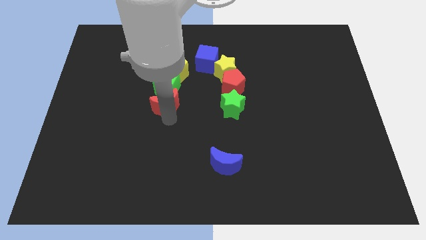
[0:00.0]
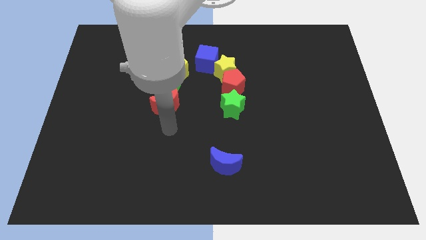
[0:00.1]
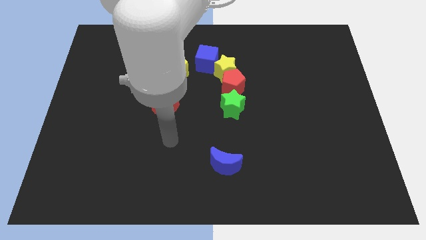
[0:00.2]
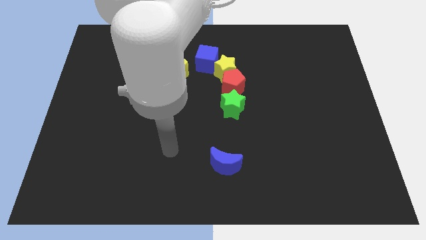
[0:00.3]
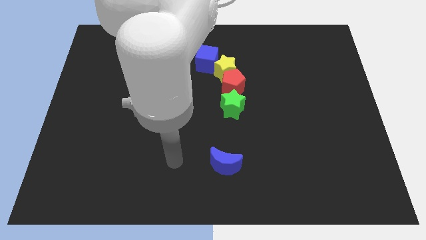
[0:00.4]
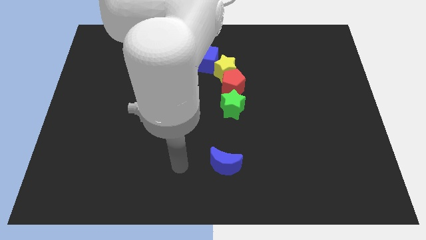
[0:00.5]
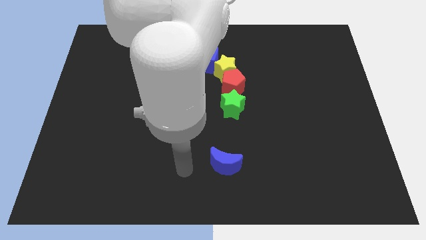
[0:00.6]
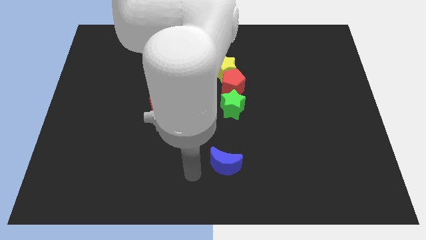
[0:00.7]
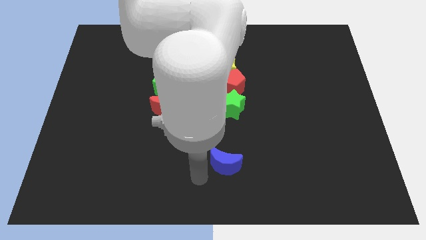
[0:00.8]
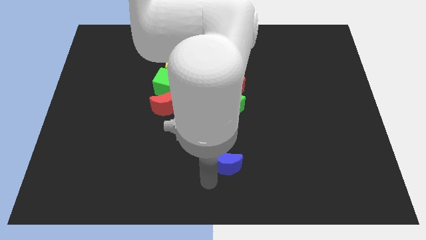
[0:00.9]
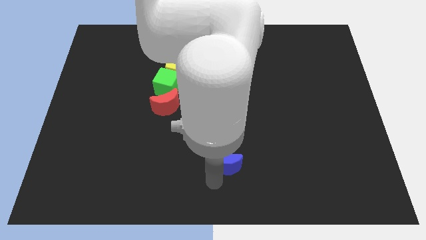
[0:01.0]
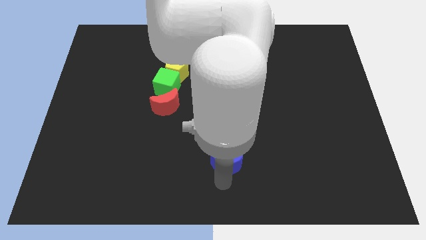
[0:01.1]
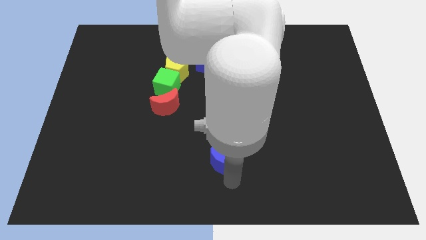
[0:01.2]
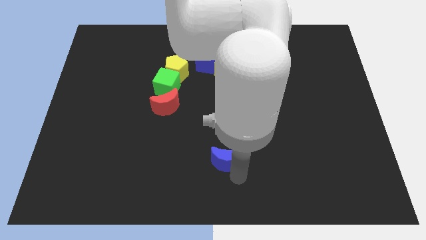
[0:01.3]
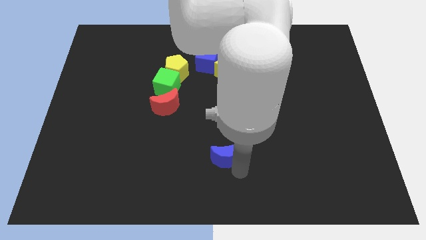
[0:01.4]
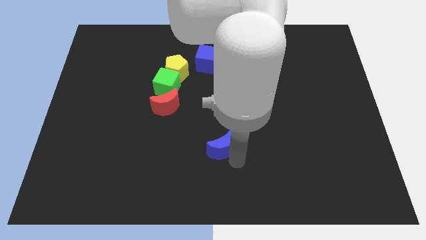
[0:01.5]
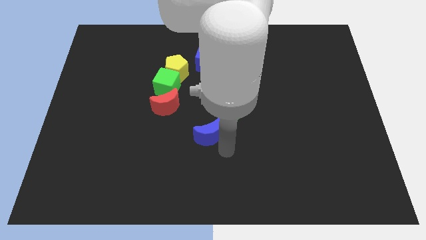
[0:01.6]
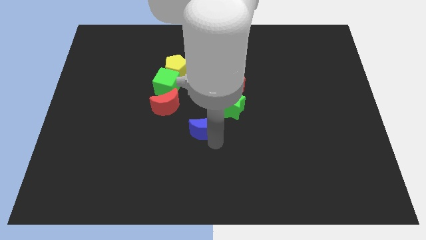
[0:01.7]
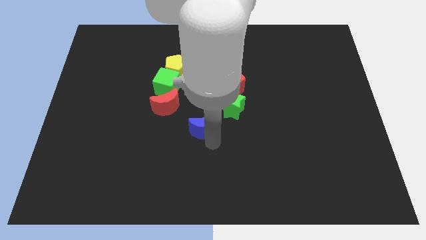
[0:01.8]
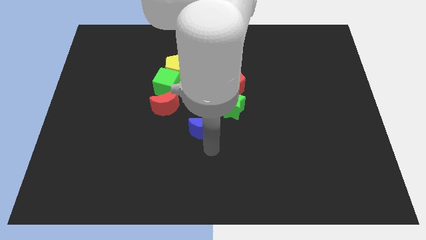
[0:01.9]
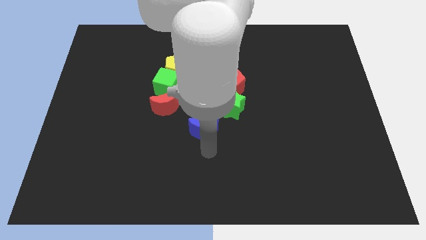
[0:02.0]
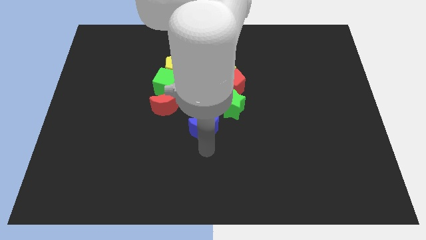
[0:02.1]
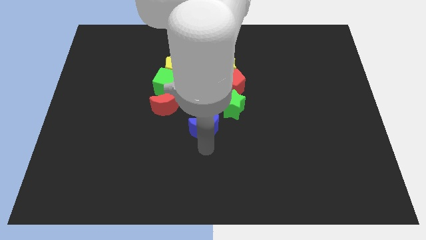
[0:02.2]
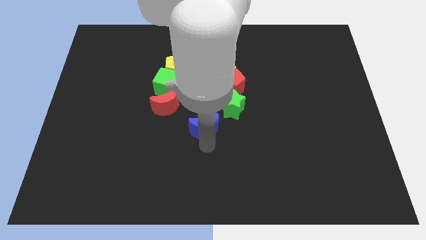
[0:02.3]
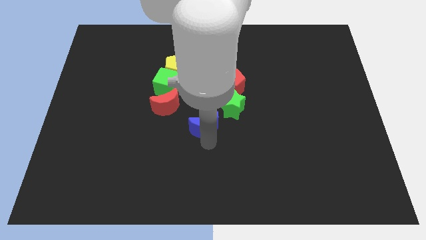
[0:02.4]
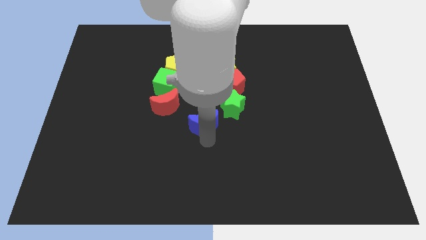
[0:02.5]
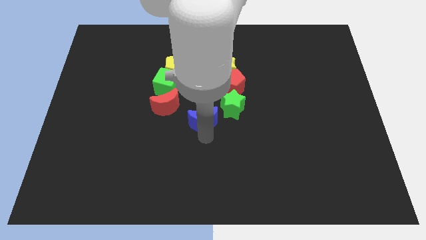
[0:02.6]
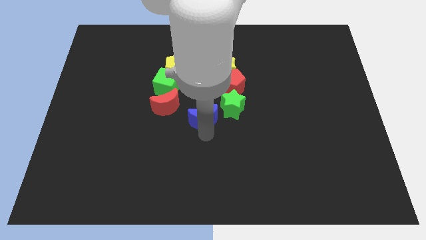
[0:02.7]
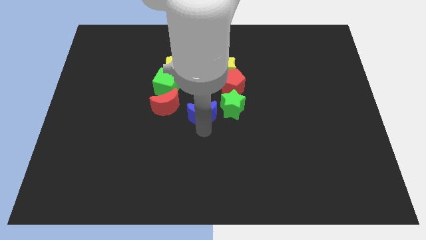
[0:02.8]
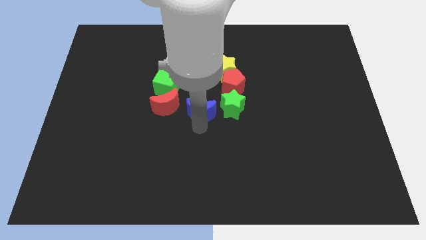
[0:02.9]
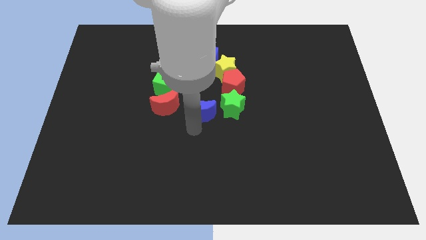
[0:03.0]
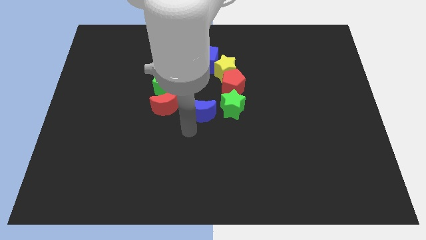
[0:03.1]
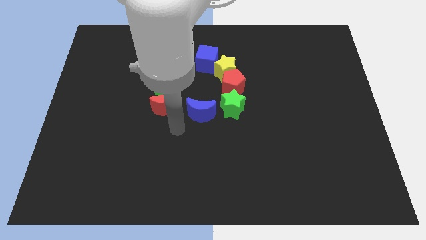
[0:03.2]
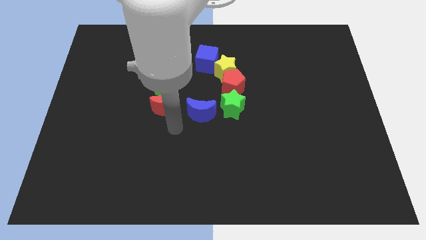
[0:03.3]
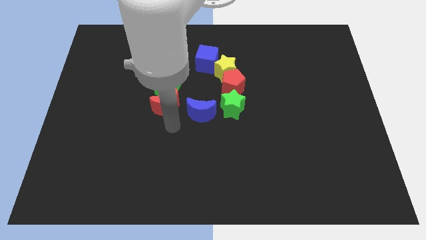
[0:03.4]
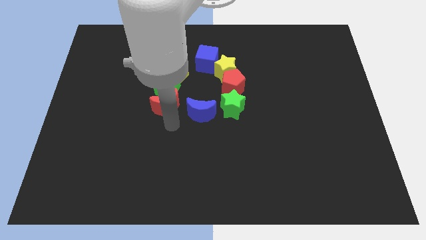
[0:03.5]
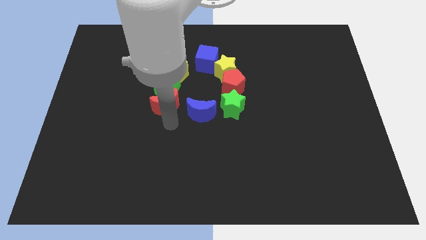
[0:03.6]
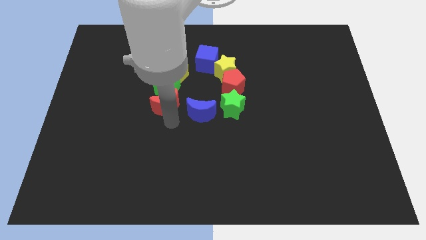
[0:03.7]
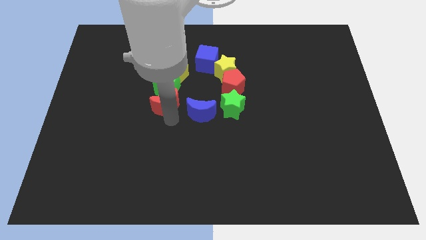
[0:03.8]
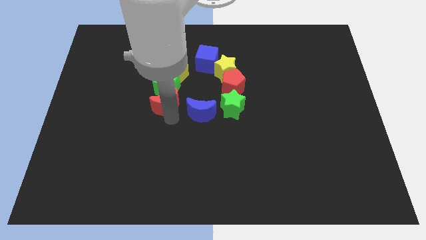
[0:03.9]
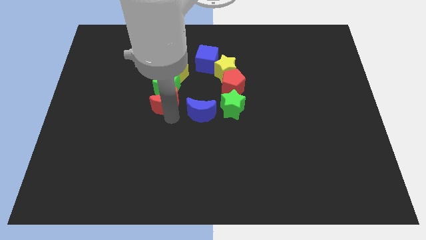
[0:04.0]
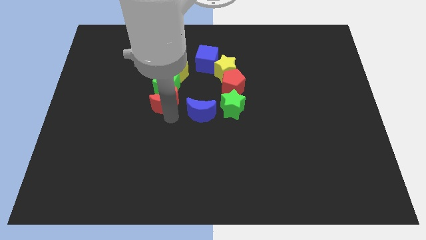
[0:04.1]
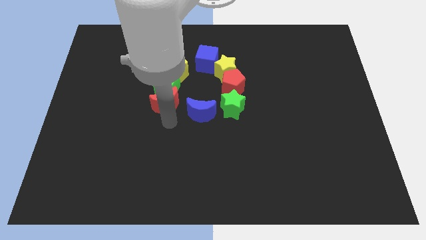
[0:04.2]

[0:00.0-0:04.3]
place blue moon in between green star and red moon

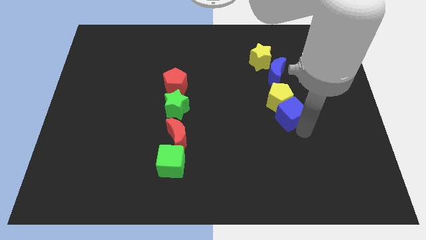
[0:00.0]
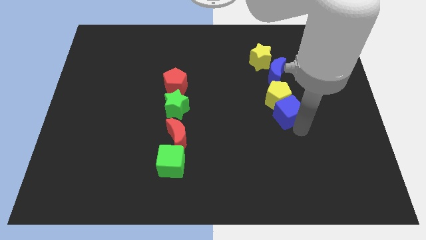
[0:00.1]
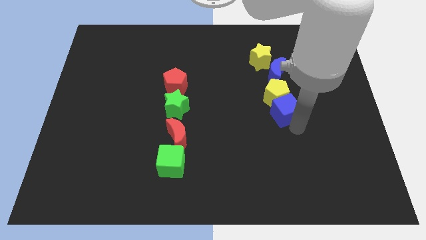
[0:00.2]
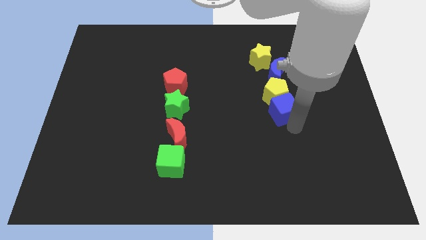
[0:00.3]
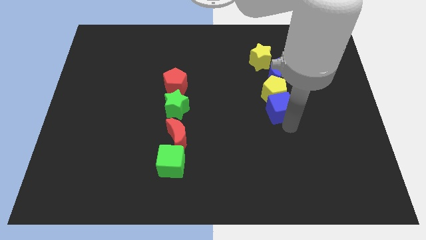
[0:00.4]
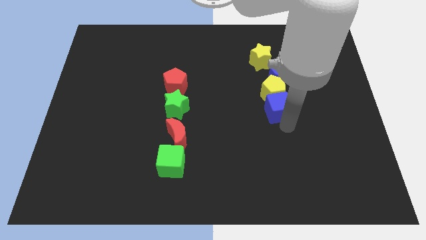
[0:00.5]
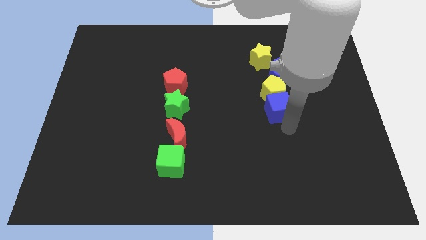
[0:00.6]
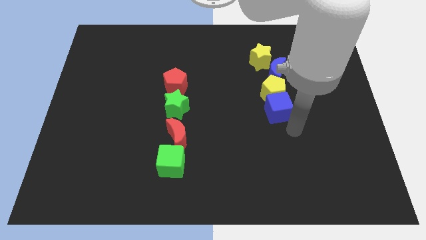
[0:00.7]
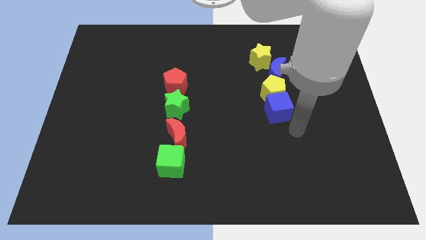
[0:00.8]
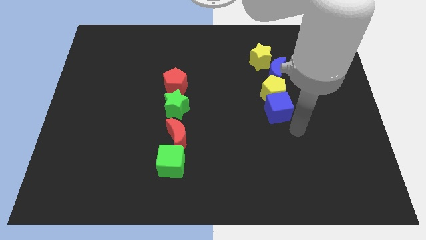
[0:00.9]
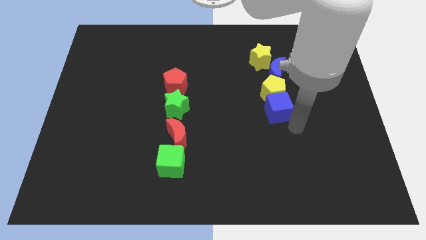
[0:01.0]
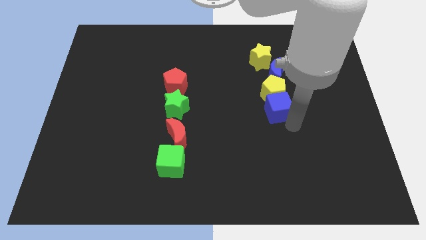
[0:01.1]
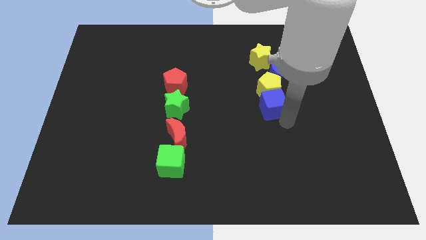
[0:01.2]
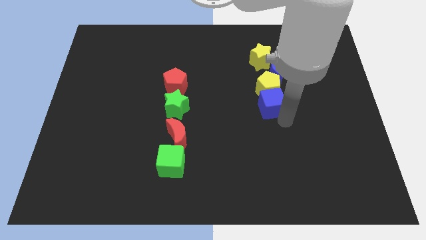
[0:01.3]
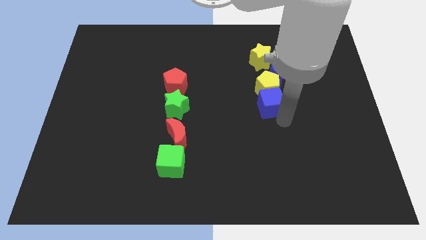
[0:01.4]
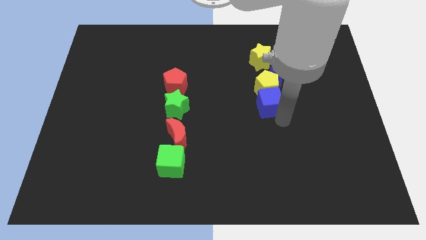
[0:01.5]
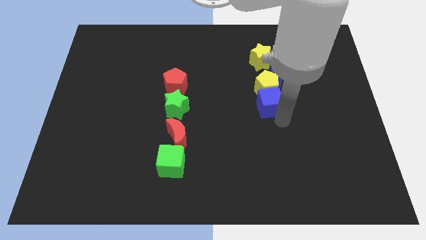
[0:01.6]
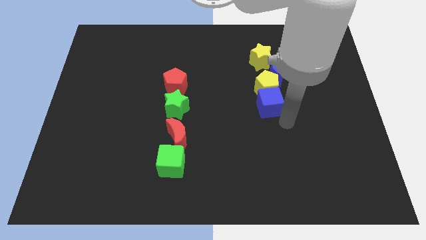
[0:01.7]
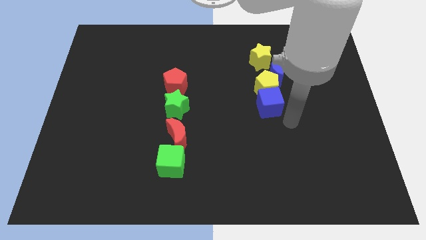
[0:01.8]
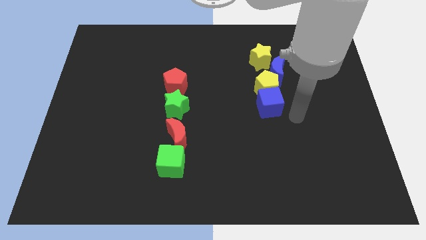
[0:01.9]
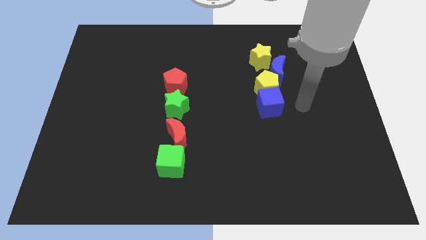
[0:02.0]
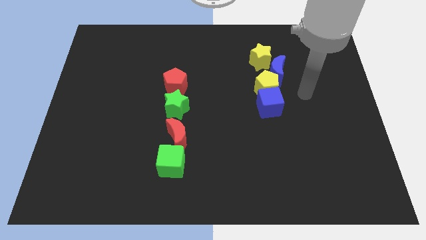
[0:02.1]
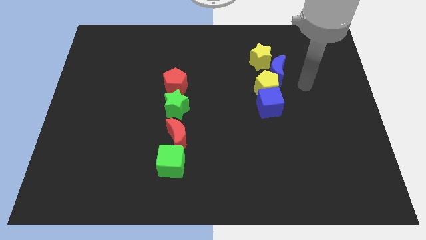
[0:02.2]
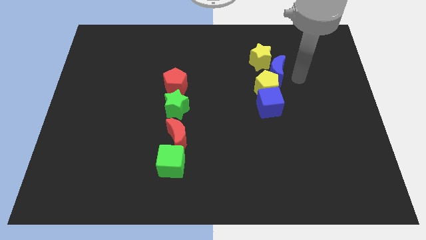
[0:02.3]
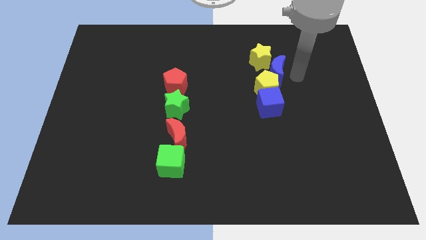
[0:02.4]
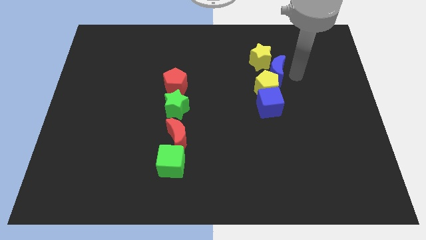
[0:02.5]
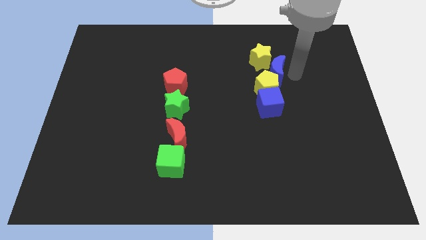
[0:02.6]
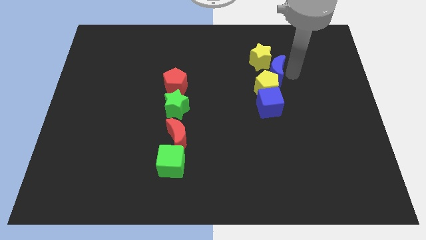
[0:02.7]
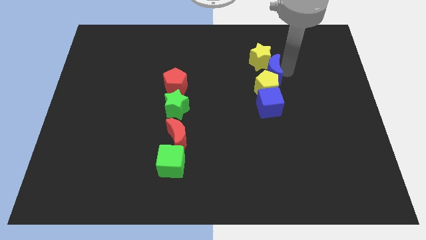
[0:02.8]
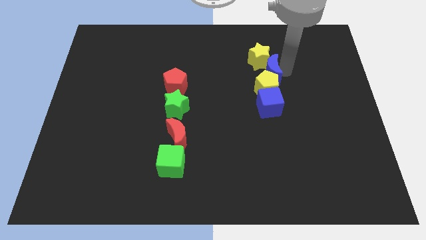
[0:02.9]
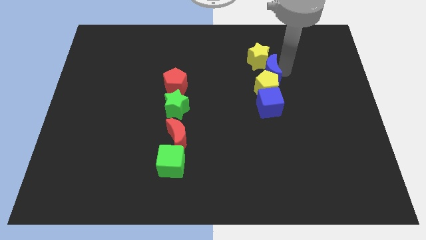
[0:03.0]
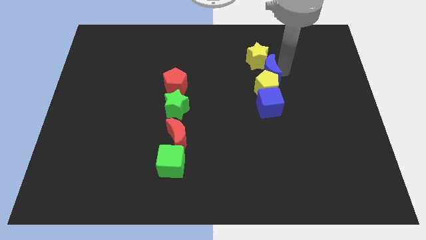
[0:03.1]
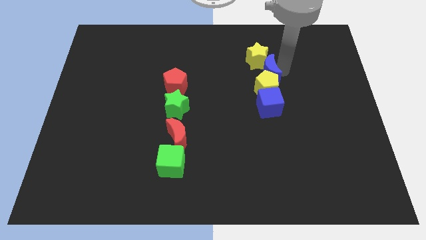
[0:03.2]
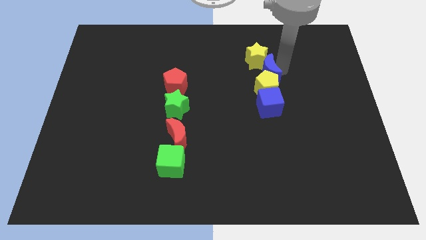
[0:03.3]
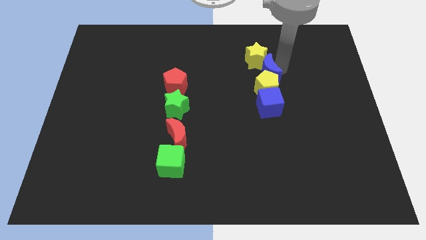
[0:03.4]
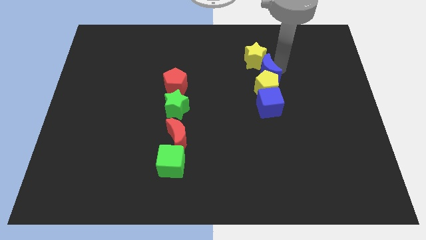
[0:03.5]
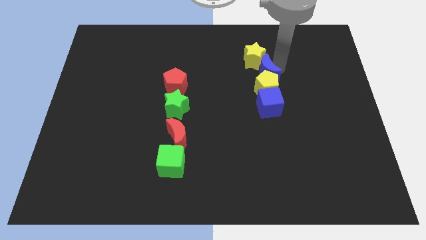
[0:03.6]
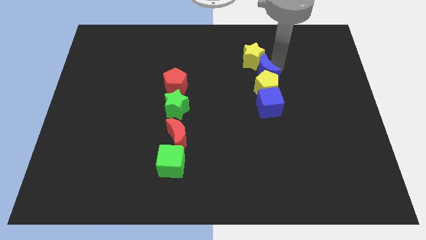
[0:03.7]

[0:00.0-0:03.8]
move the yellow pentagon and blue cube towards the yellow star

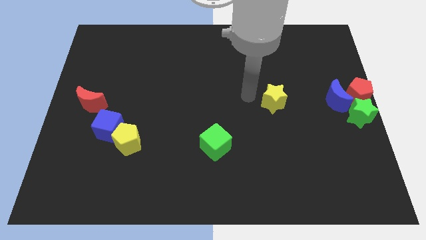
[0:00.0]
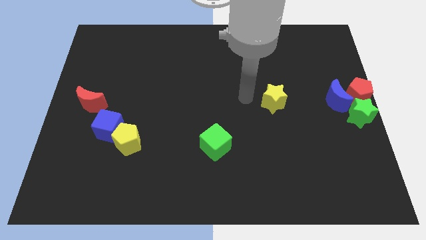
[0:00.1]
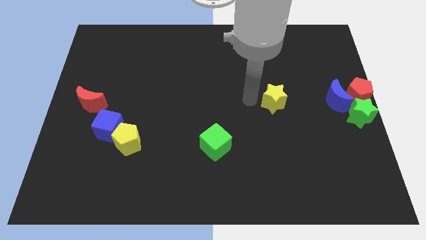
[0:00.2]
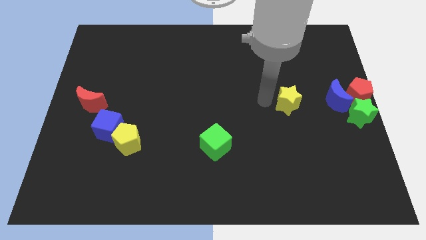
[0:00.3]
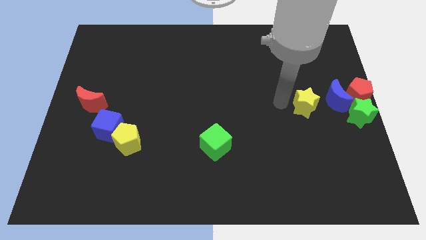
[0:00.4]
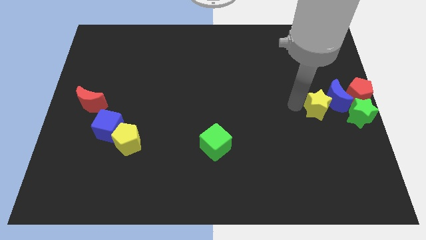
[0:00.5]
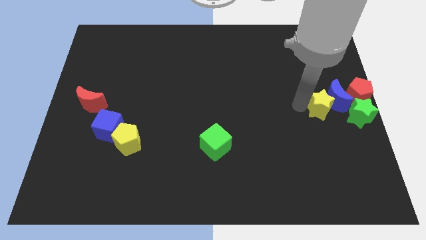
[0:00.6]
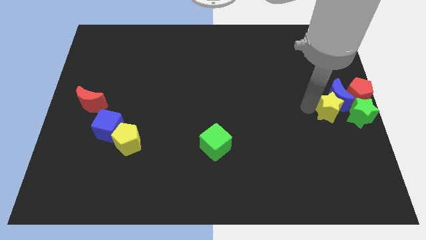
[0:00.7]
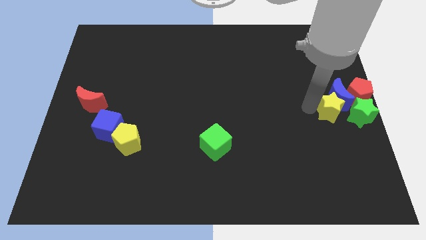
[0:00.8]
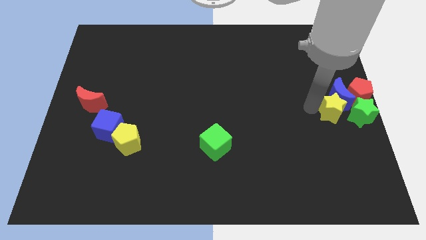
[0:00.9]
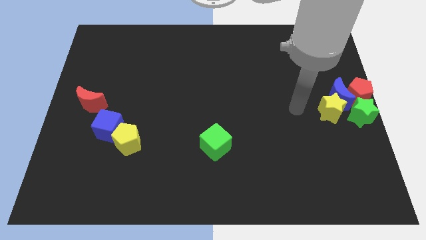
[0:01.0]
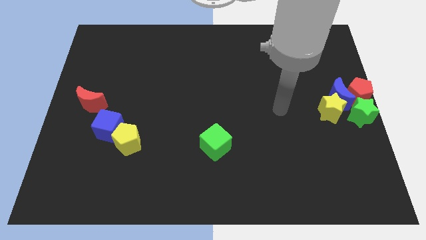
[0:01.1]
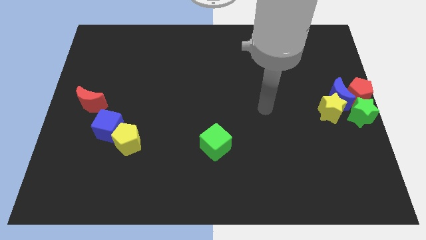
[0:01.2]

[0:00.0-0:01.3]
move the yellow star to the bottom of the blue crescent
